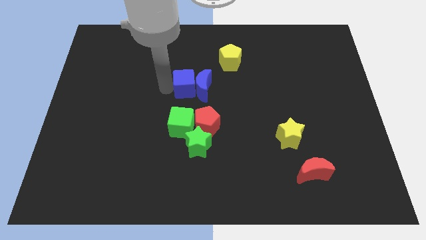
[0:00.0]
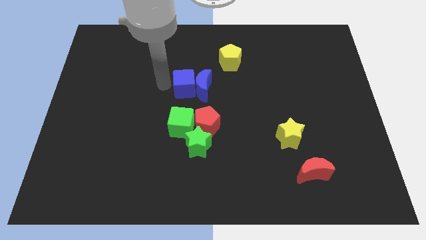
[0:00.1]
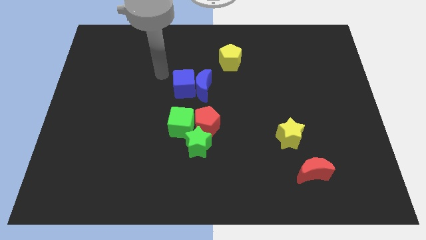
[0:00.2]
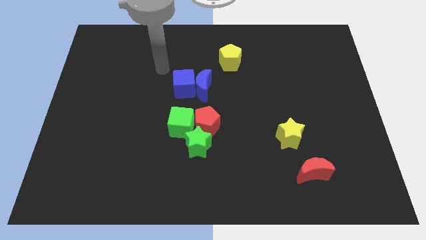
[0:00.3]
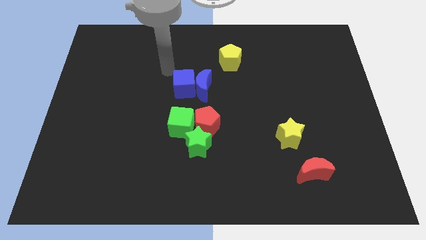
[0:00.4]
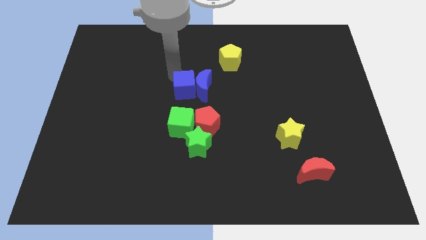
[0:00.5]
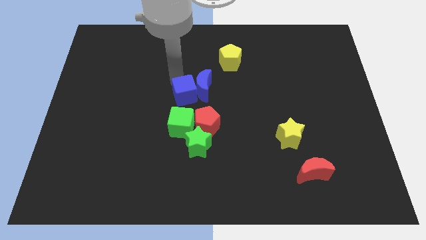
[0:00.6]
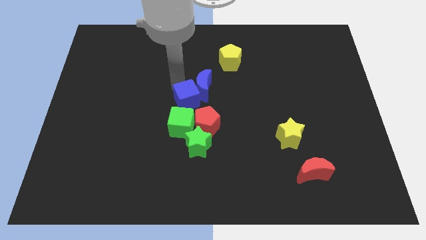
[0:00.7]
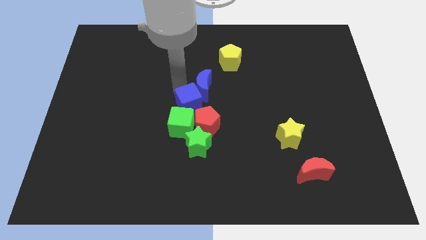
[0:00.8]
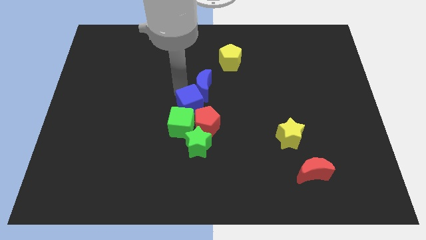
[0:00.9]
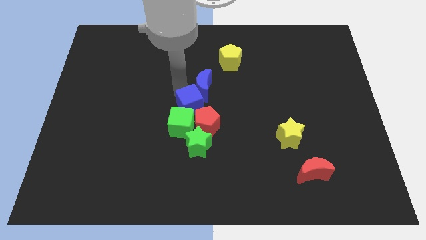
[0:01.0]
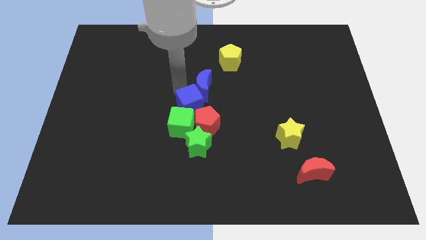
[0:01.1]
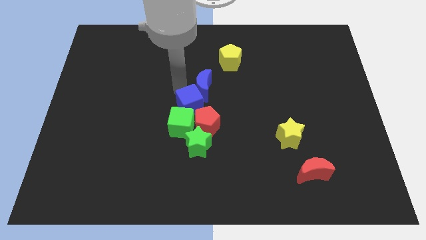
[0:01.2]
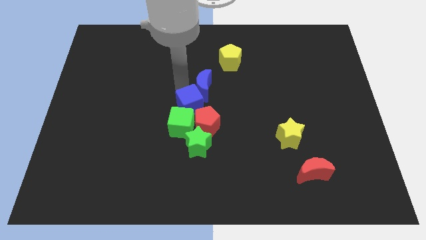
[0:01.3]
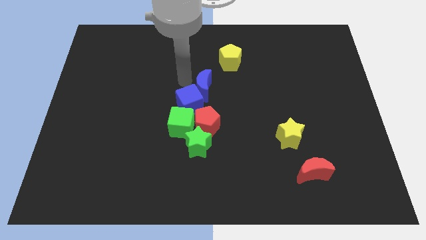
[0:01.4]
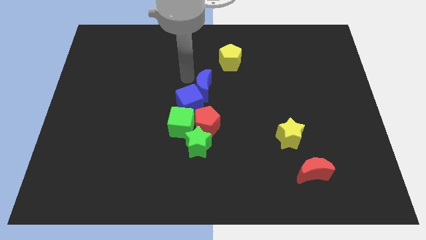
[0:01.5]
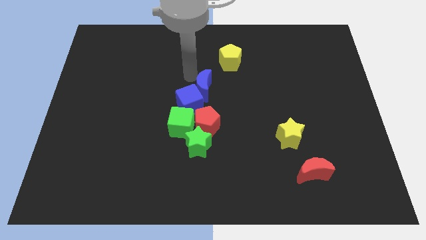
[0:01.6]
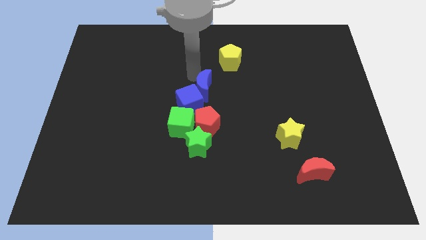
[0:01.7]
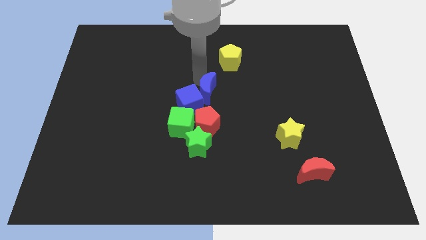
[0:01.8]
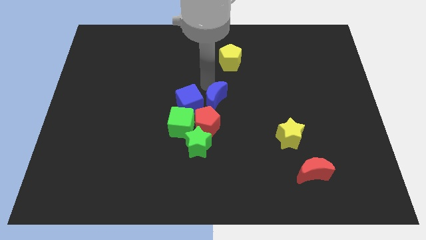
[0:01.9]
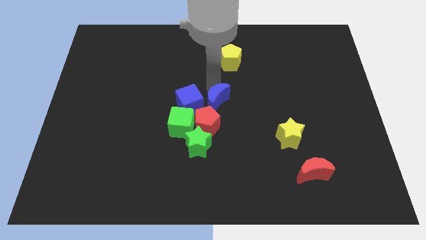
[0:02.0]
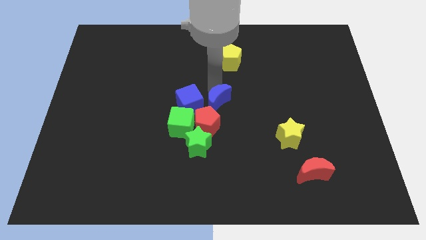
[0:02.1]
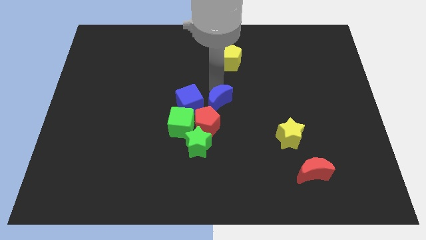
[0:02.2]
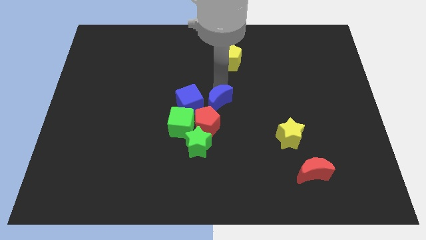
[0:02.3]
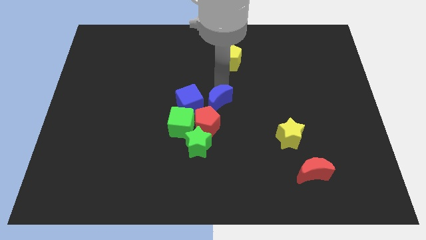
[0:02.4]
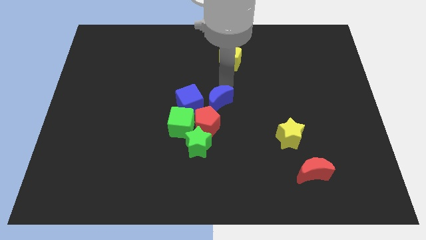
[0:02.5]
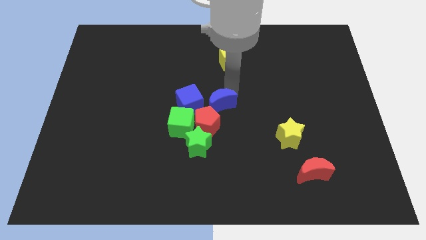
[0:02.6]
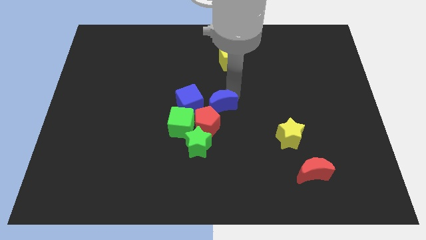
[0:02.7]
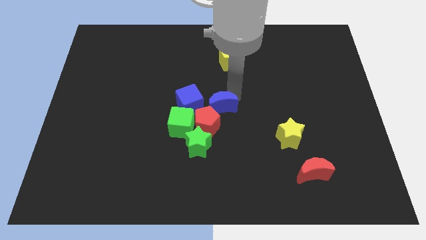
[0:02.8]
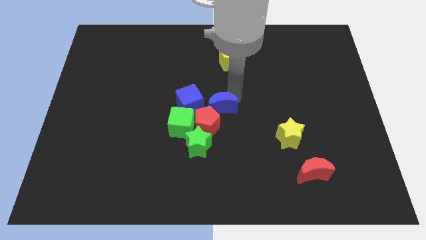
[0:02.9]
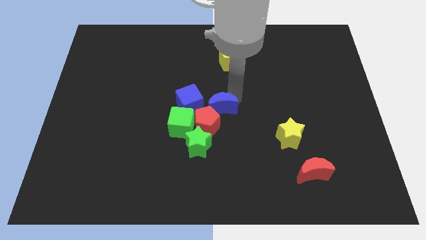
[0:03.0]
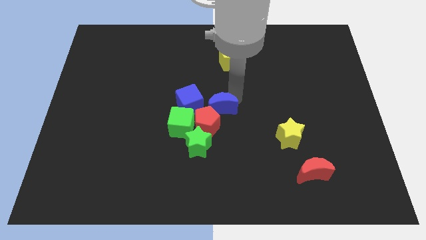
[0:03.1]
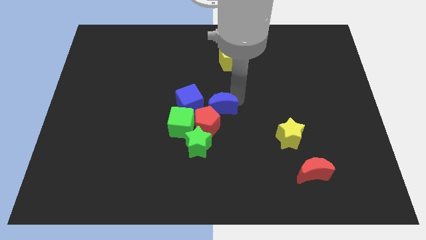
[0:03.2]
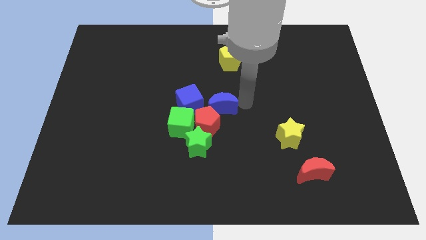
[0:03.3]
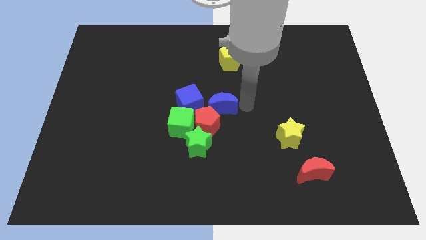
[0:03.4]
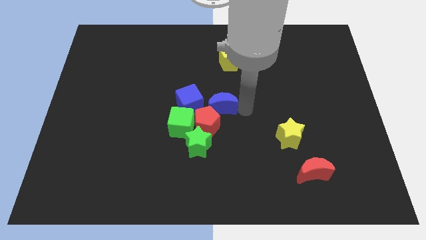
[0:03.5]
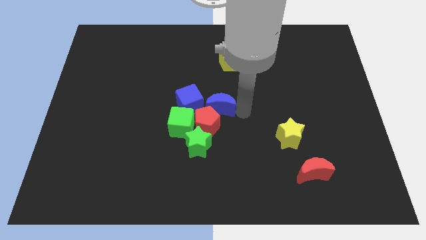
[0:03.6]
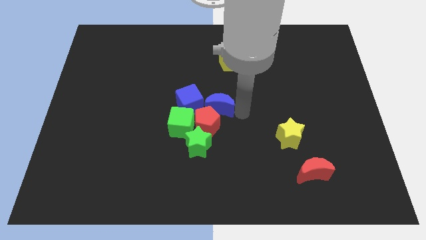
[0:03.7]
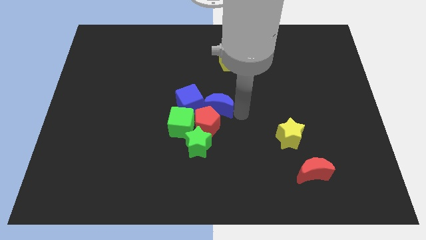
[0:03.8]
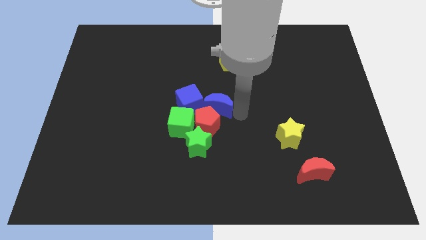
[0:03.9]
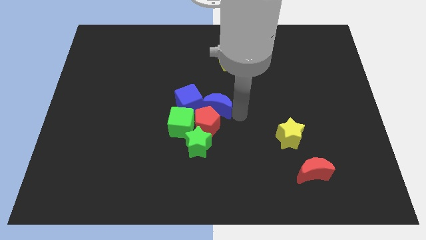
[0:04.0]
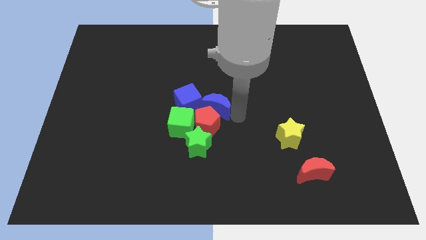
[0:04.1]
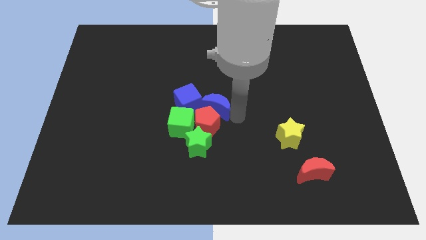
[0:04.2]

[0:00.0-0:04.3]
move the blue cube to the top of the green cube

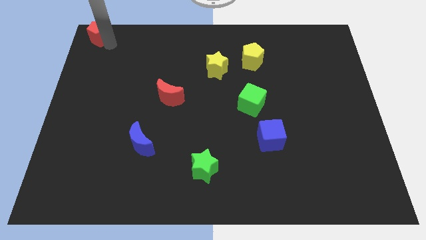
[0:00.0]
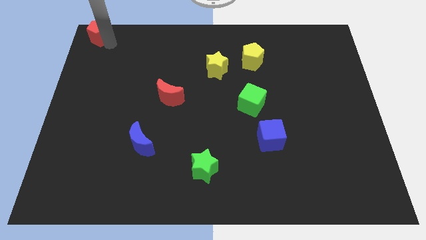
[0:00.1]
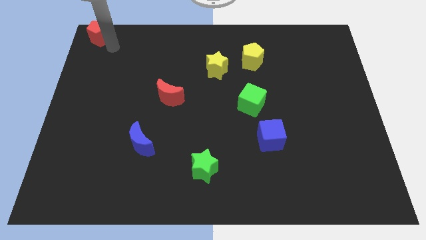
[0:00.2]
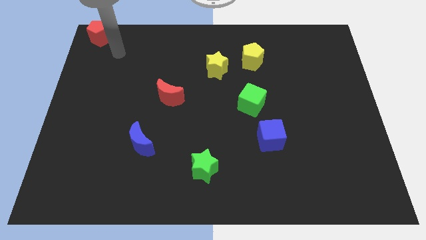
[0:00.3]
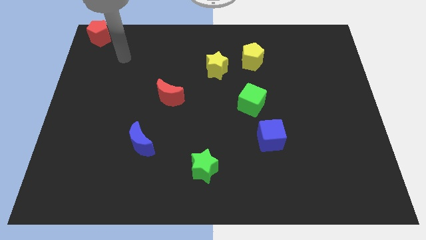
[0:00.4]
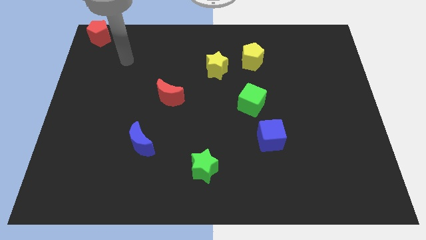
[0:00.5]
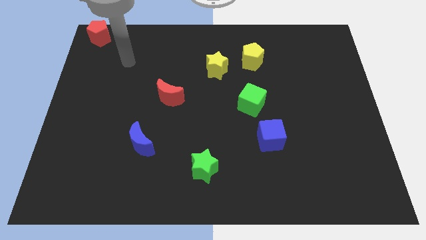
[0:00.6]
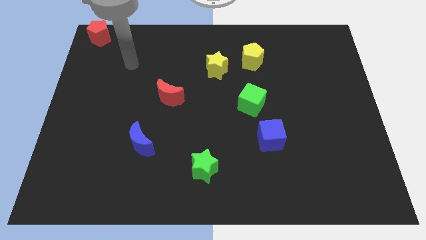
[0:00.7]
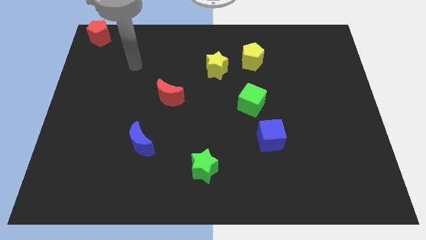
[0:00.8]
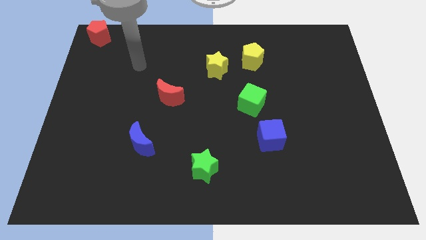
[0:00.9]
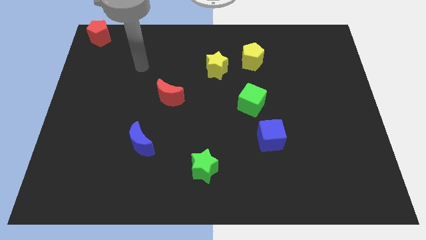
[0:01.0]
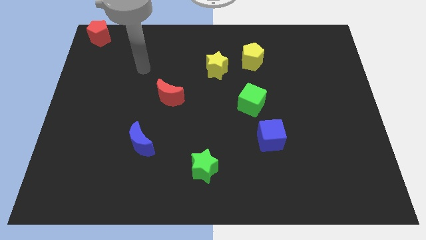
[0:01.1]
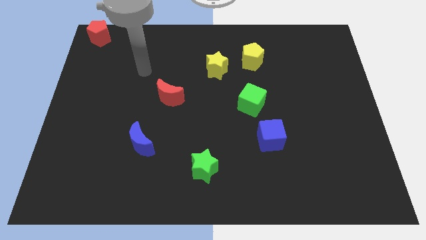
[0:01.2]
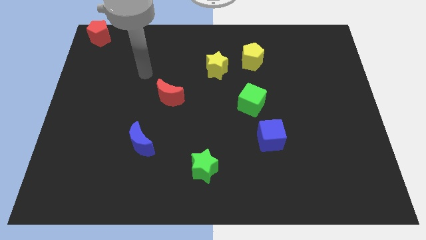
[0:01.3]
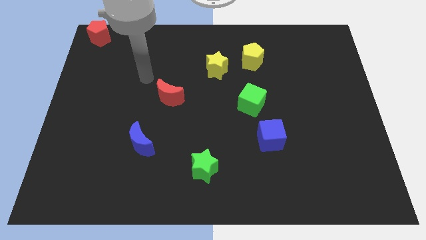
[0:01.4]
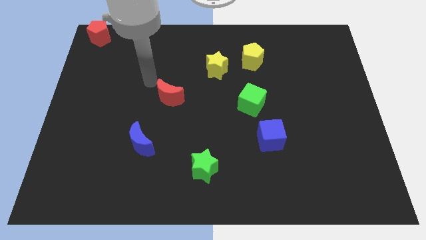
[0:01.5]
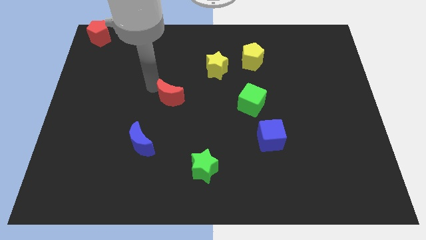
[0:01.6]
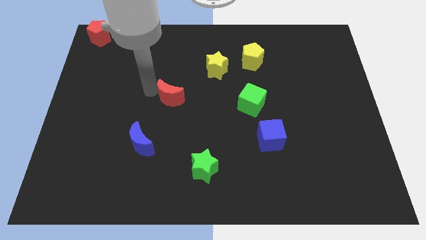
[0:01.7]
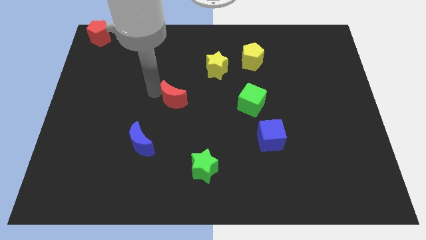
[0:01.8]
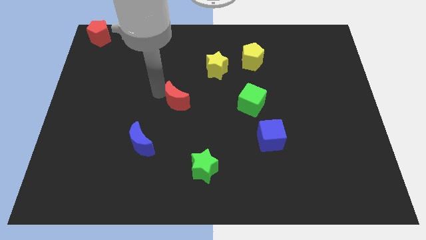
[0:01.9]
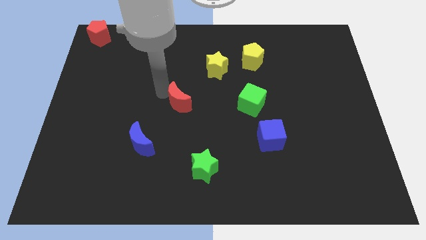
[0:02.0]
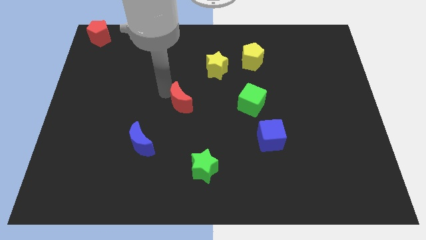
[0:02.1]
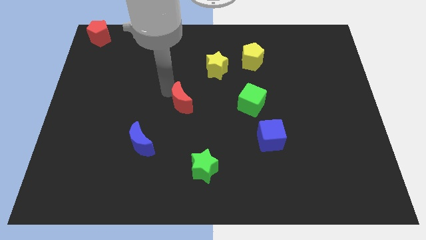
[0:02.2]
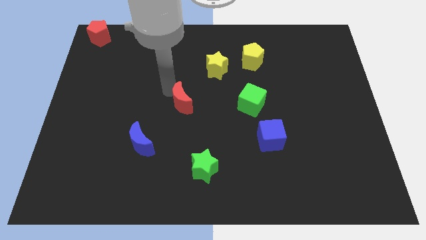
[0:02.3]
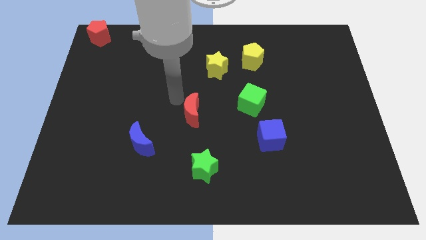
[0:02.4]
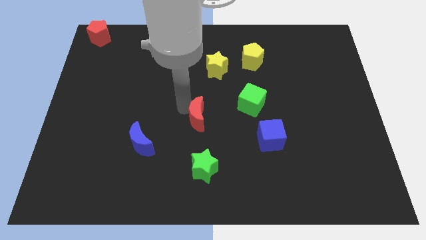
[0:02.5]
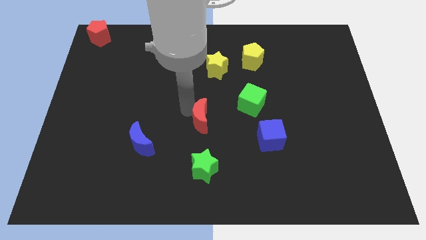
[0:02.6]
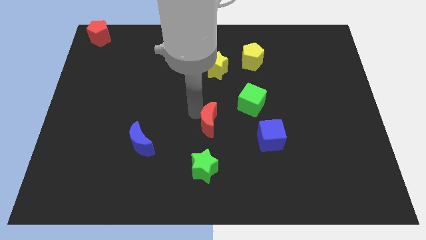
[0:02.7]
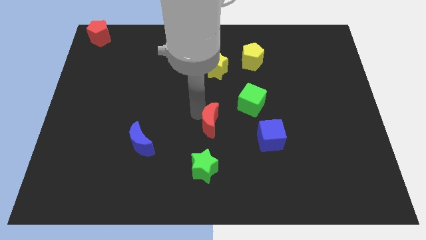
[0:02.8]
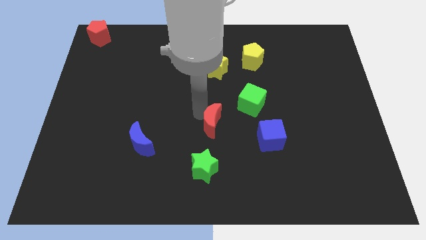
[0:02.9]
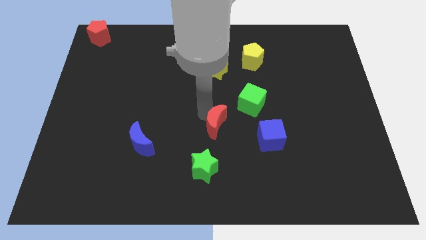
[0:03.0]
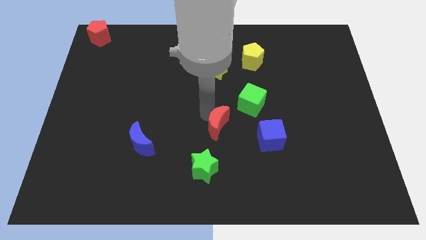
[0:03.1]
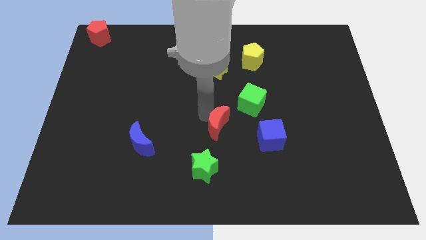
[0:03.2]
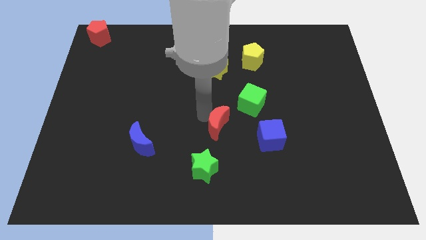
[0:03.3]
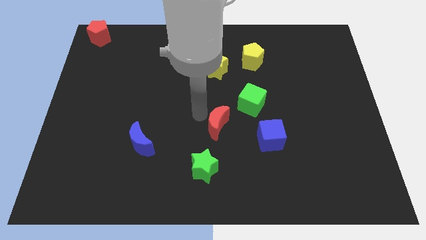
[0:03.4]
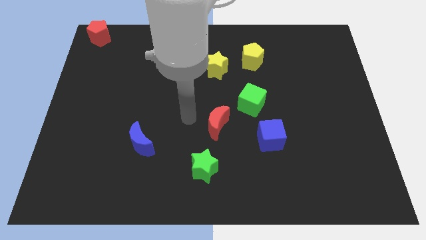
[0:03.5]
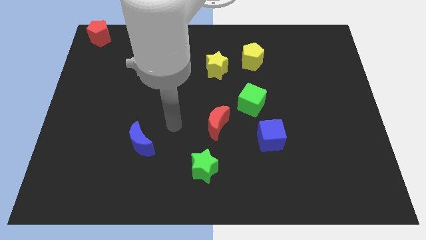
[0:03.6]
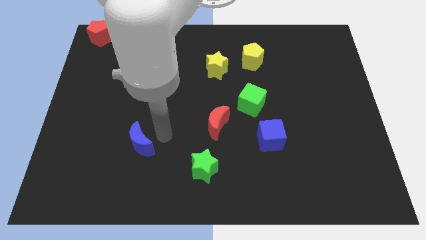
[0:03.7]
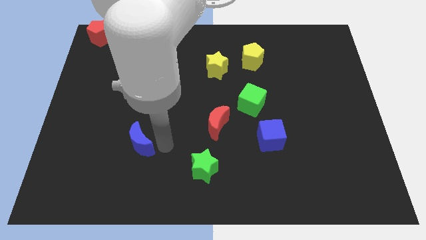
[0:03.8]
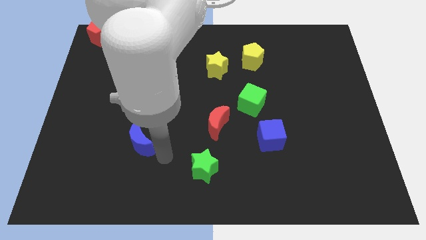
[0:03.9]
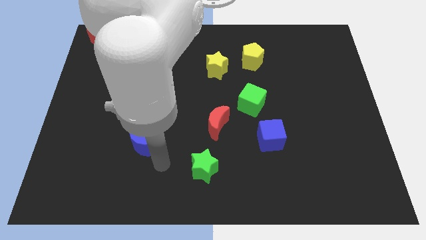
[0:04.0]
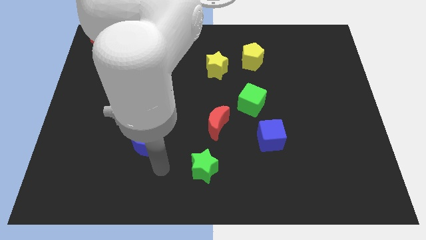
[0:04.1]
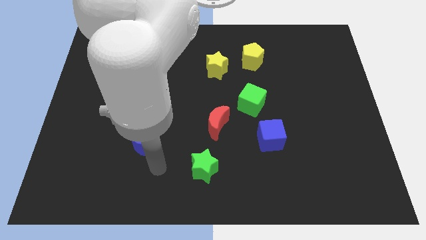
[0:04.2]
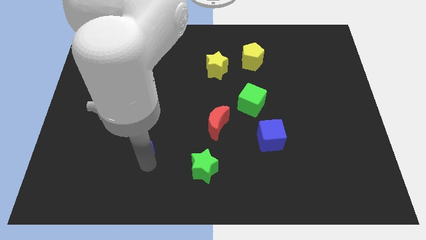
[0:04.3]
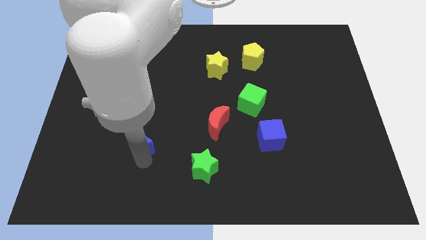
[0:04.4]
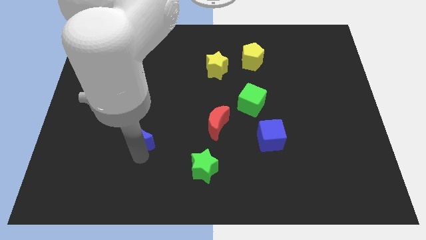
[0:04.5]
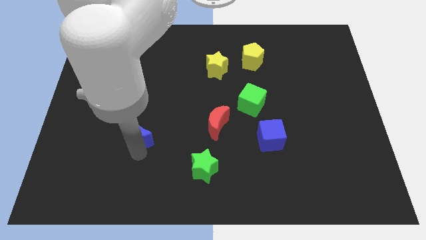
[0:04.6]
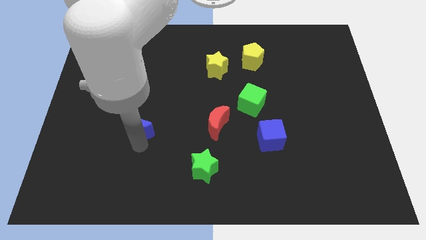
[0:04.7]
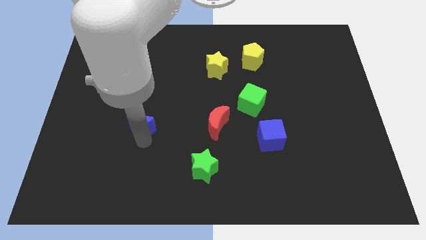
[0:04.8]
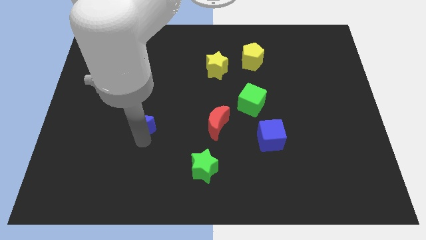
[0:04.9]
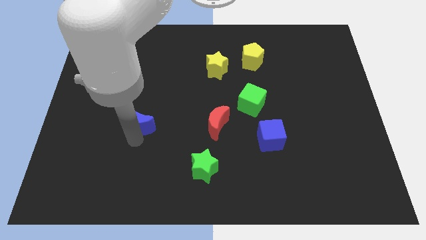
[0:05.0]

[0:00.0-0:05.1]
push the red crescent towards the center of the board
